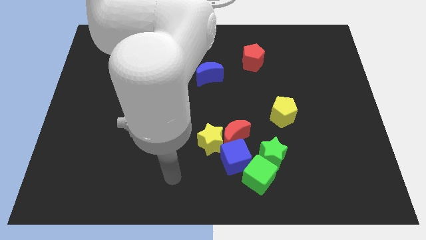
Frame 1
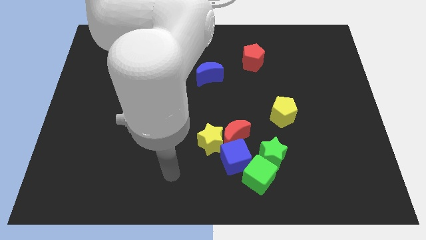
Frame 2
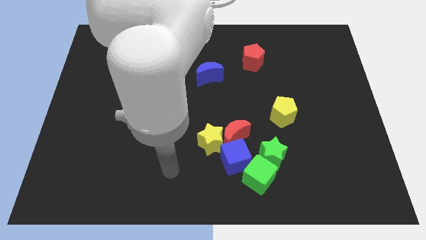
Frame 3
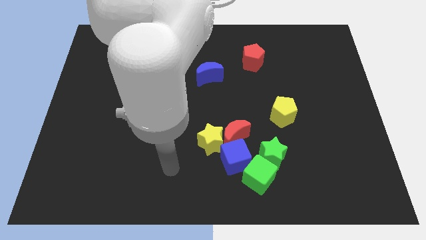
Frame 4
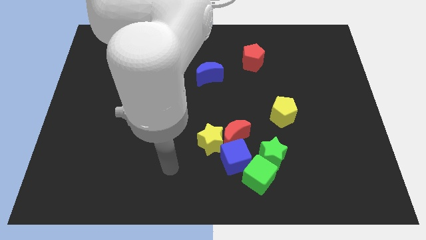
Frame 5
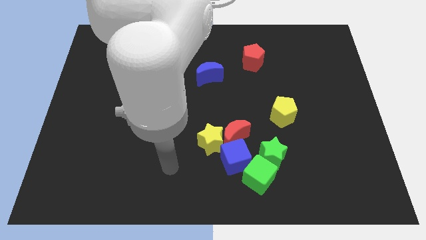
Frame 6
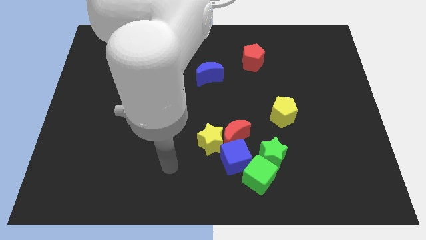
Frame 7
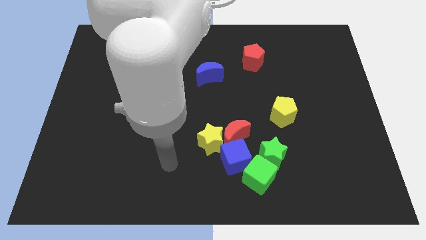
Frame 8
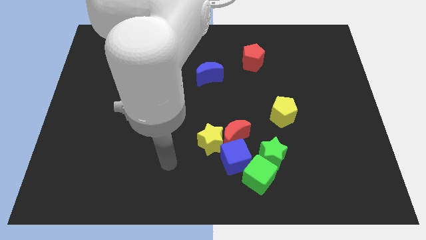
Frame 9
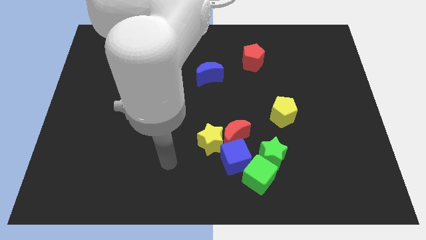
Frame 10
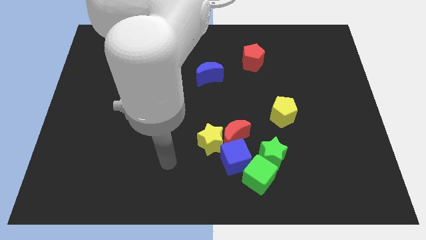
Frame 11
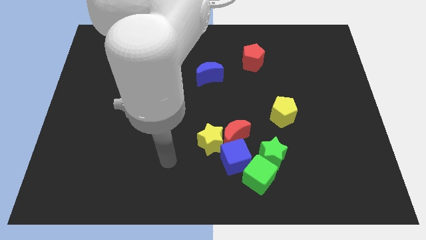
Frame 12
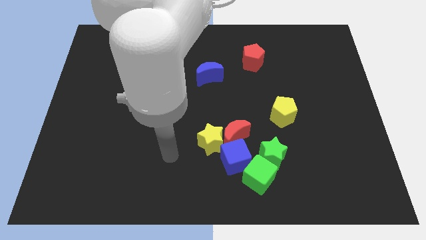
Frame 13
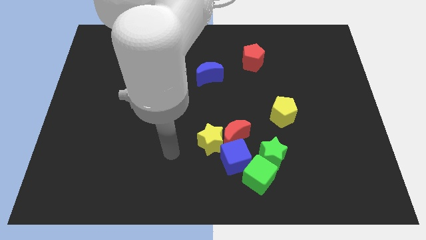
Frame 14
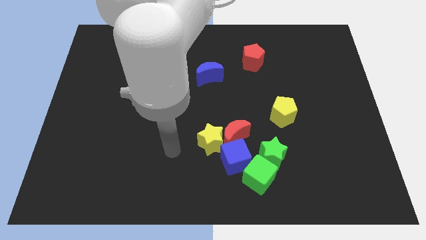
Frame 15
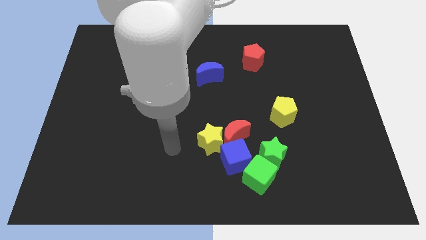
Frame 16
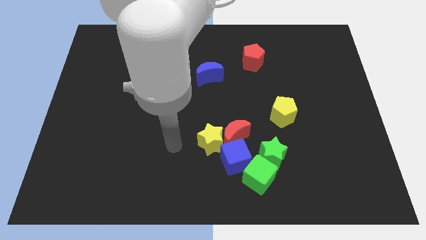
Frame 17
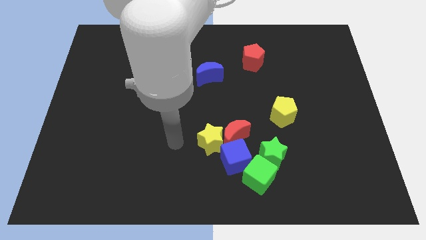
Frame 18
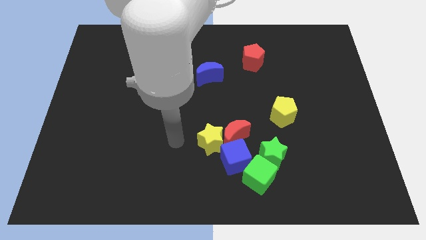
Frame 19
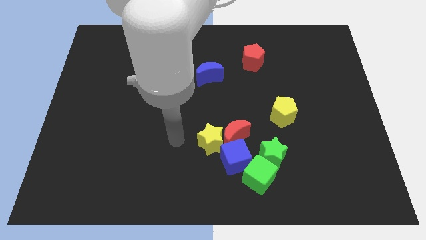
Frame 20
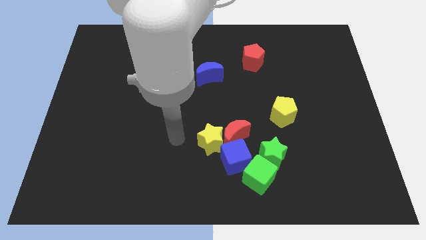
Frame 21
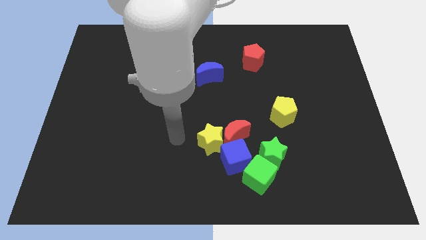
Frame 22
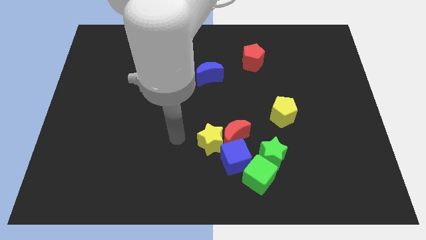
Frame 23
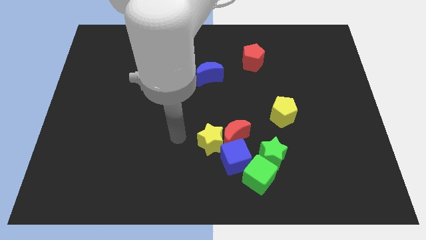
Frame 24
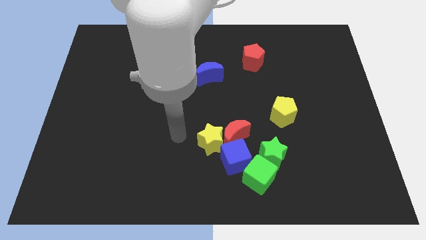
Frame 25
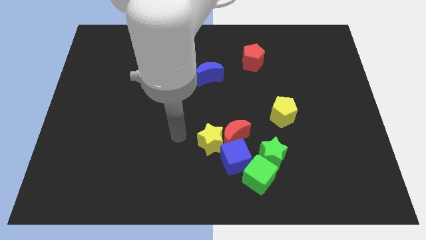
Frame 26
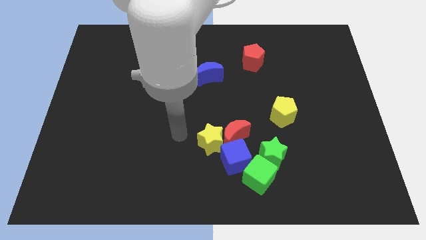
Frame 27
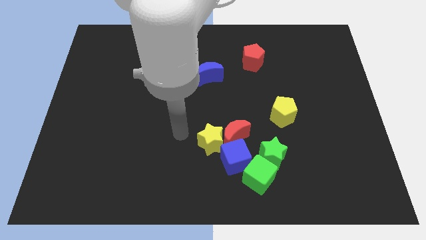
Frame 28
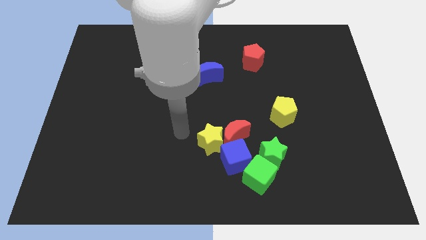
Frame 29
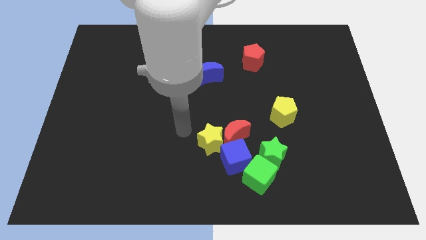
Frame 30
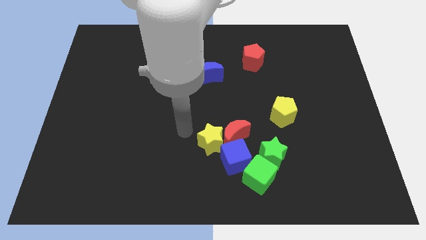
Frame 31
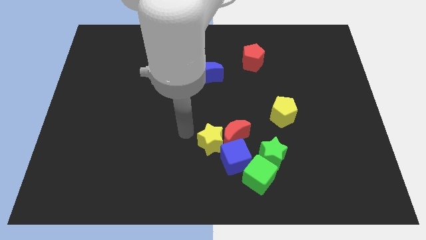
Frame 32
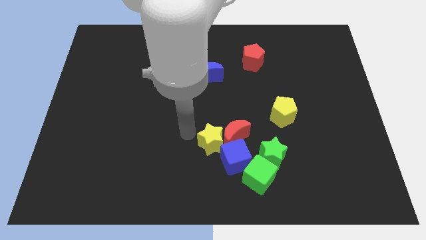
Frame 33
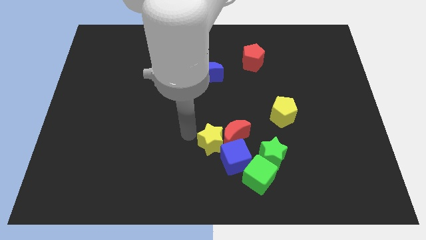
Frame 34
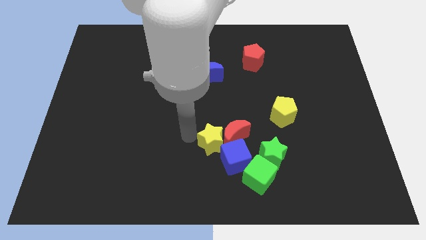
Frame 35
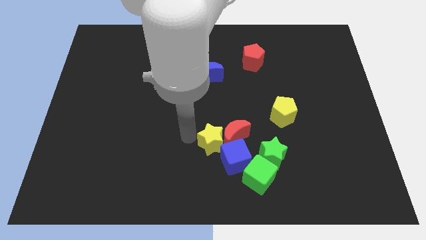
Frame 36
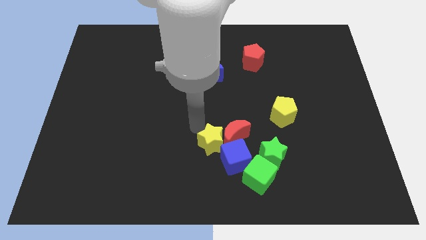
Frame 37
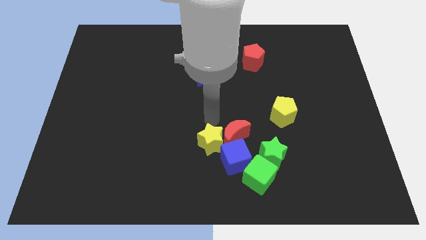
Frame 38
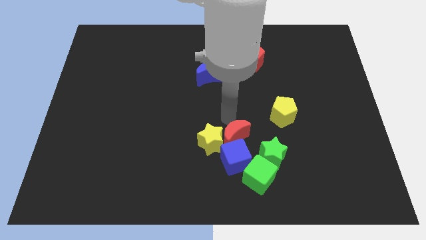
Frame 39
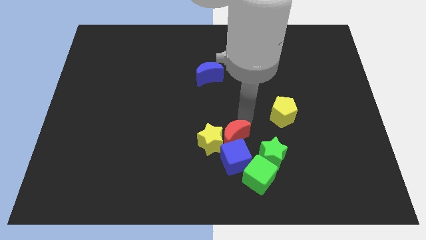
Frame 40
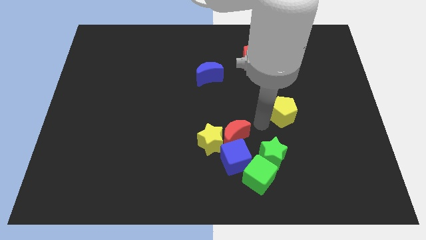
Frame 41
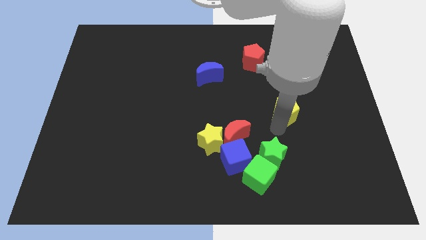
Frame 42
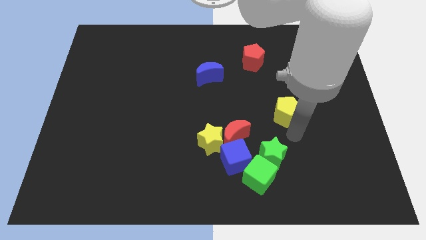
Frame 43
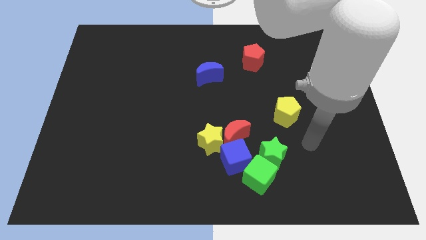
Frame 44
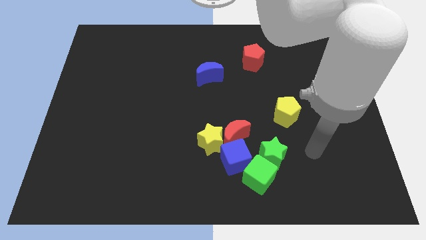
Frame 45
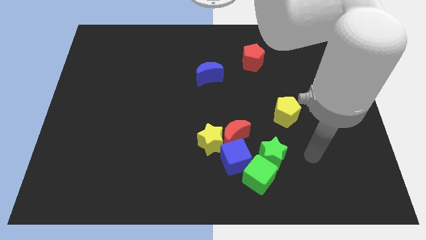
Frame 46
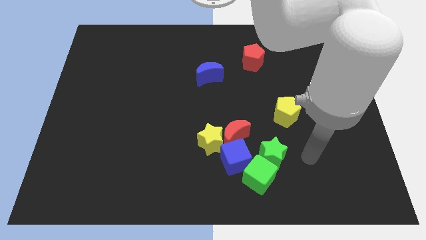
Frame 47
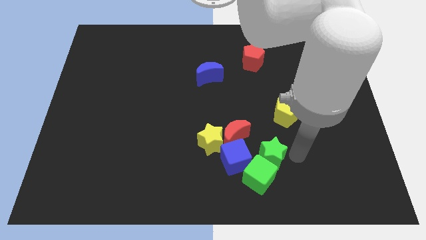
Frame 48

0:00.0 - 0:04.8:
move the arm right to the green star

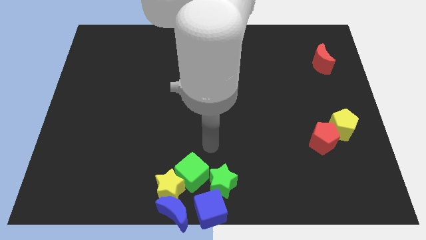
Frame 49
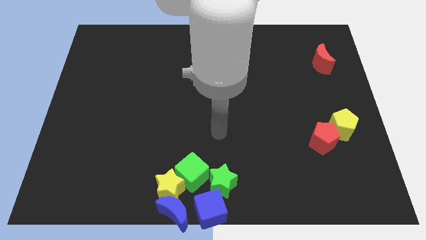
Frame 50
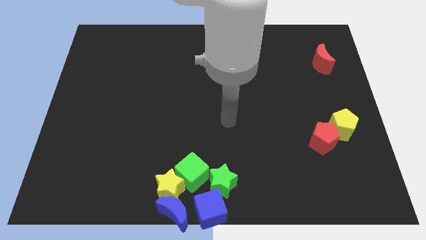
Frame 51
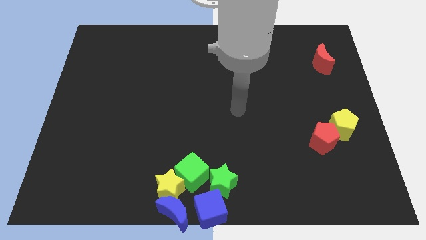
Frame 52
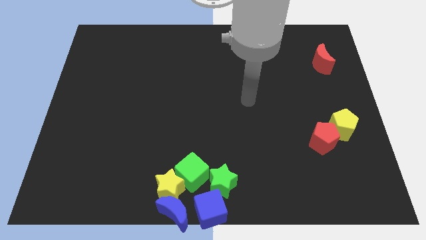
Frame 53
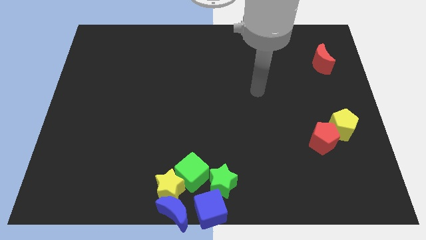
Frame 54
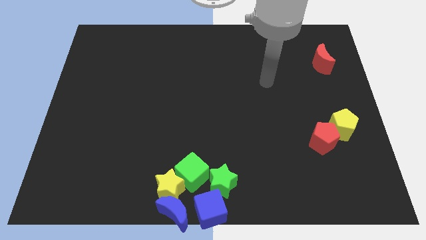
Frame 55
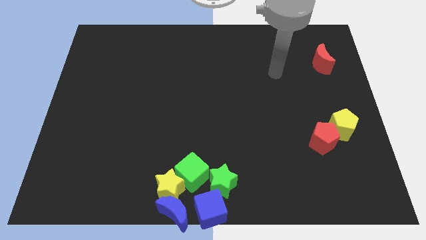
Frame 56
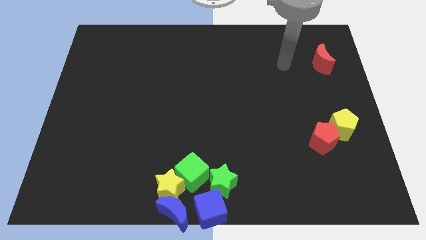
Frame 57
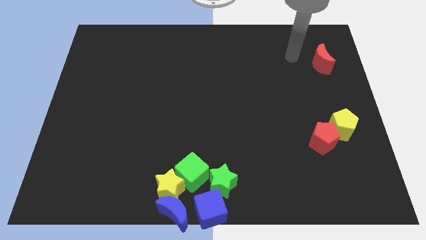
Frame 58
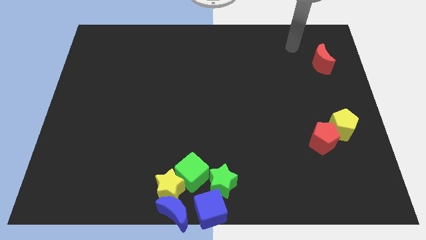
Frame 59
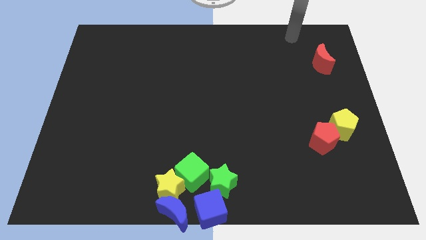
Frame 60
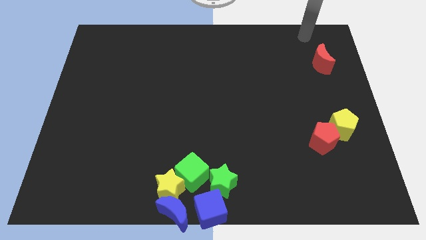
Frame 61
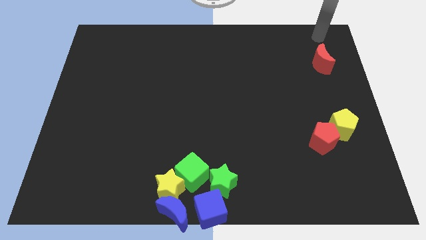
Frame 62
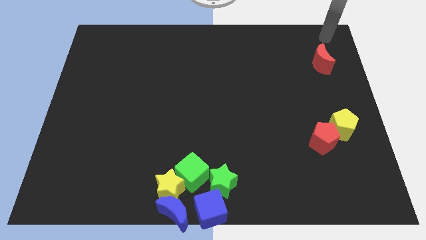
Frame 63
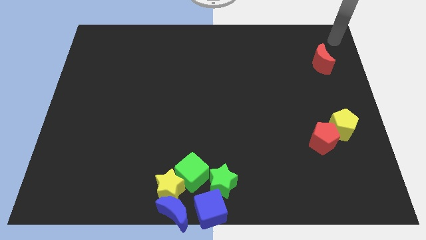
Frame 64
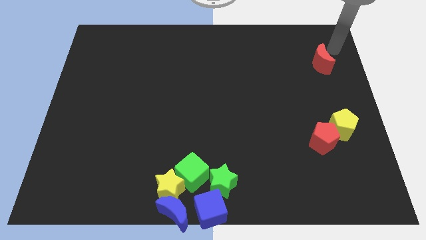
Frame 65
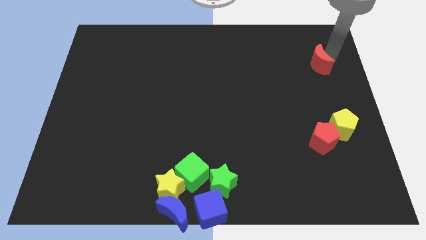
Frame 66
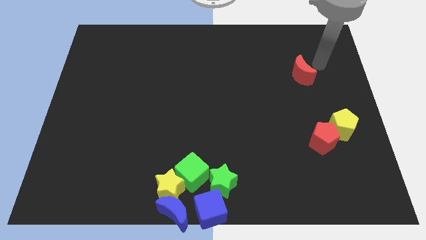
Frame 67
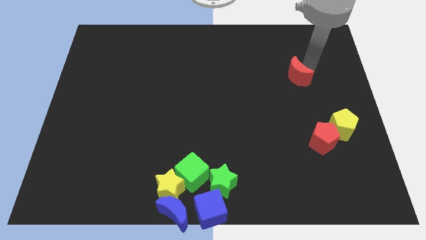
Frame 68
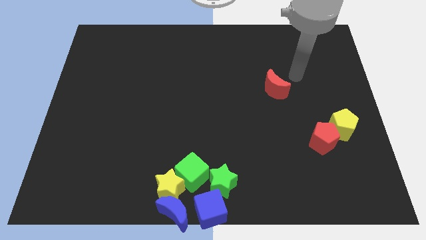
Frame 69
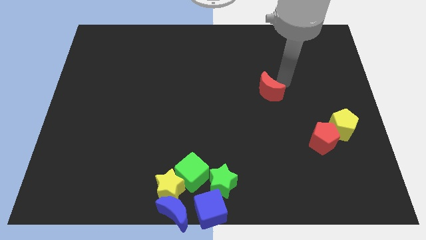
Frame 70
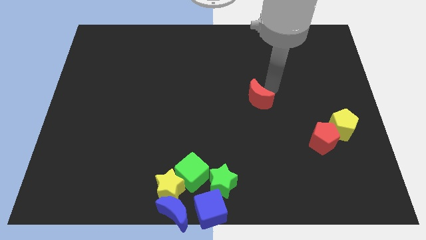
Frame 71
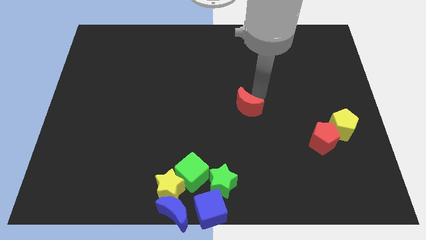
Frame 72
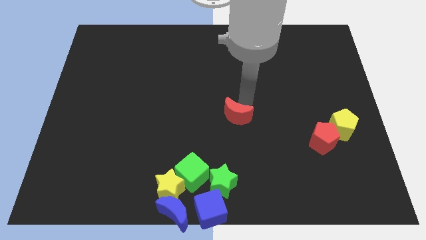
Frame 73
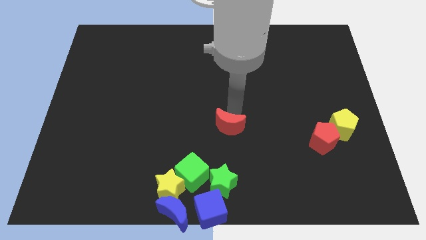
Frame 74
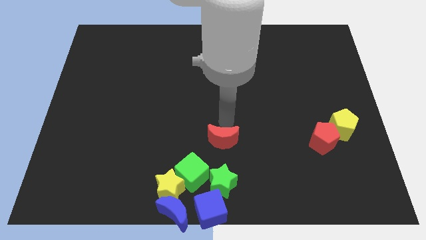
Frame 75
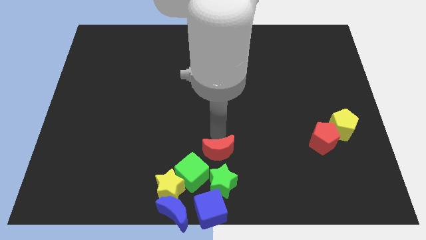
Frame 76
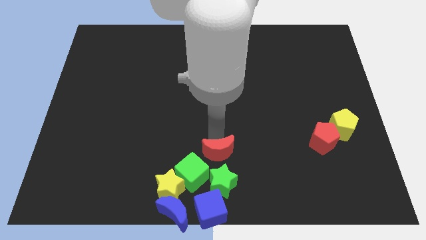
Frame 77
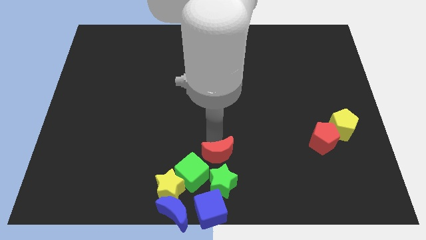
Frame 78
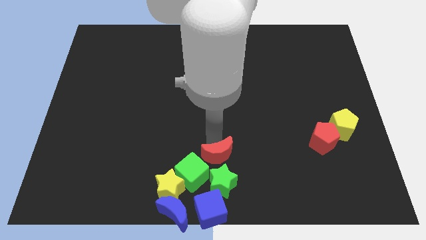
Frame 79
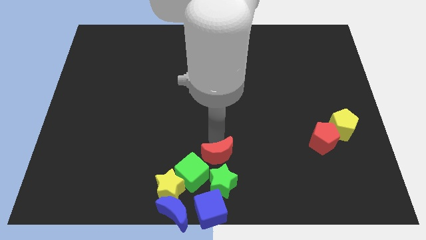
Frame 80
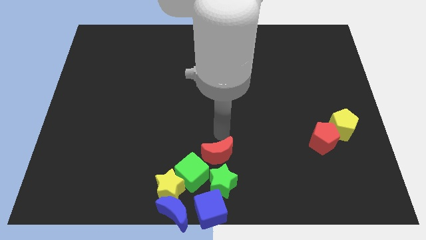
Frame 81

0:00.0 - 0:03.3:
push the red crescent to the group of blocks

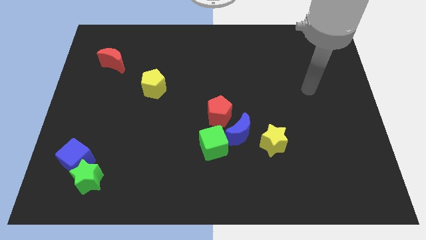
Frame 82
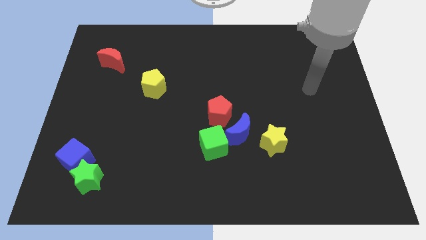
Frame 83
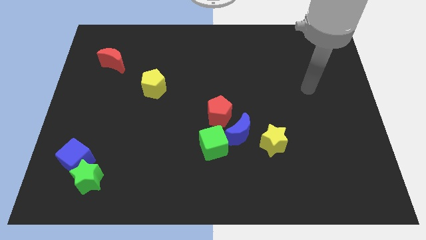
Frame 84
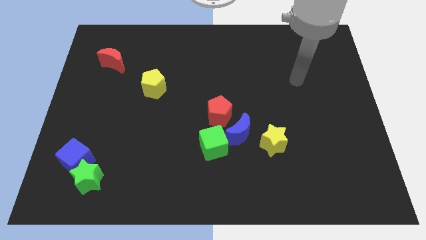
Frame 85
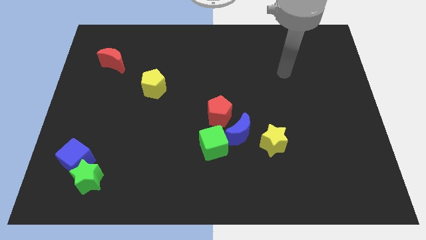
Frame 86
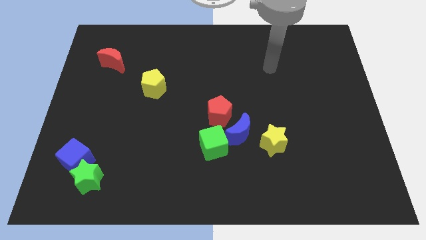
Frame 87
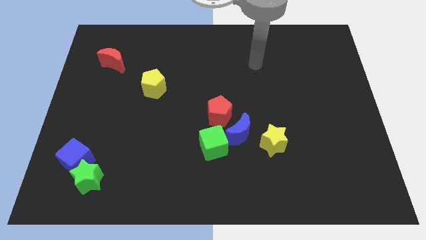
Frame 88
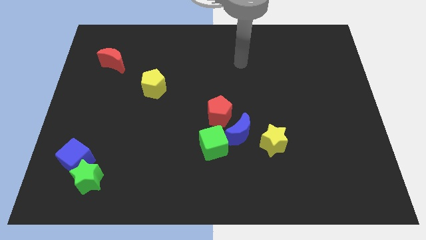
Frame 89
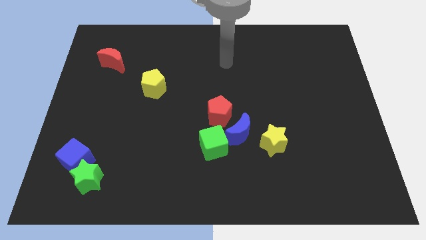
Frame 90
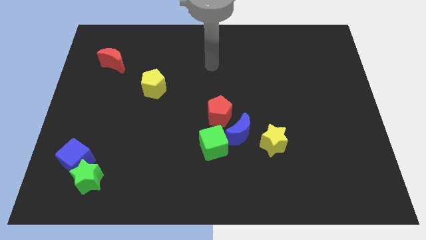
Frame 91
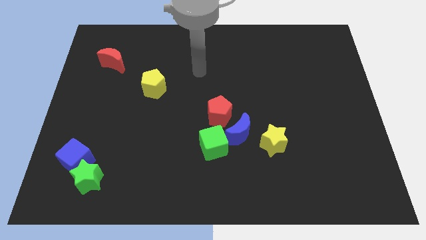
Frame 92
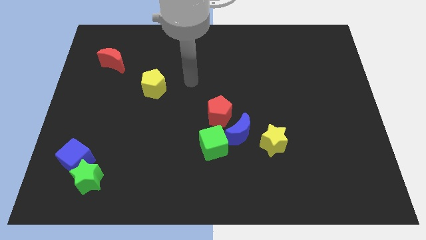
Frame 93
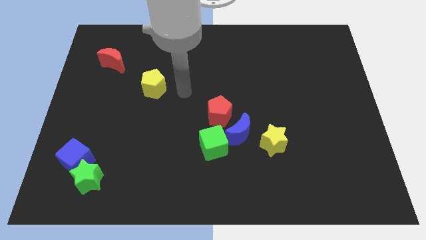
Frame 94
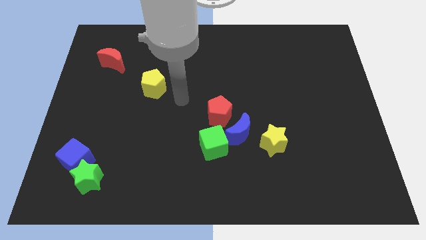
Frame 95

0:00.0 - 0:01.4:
put your hand in between the yellow pentagon and red pentagon
